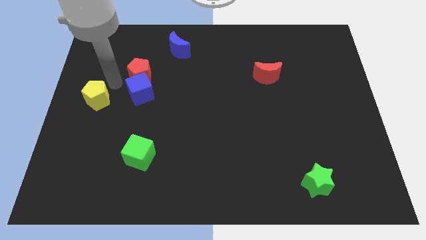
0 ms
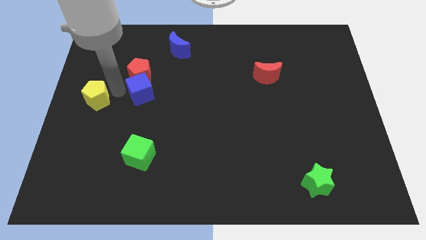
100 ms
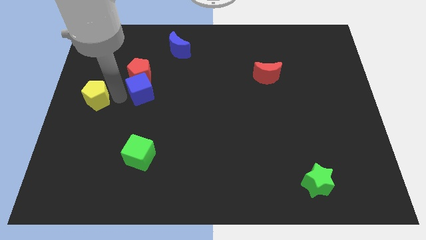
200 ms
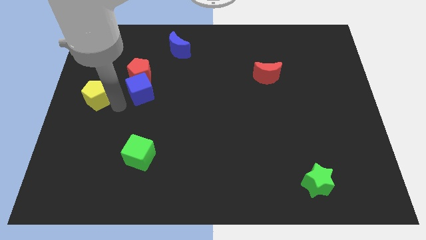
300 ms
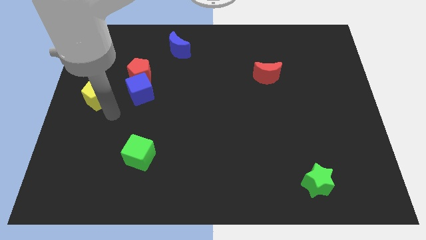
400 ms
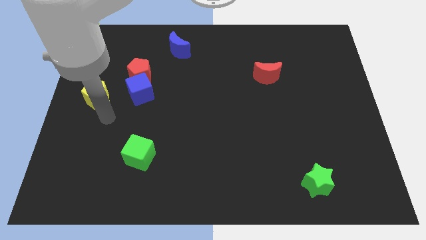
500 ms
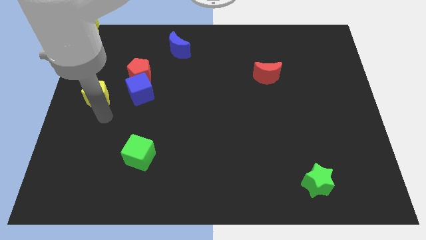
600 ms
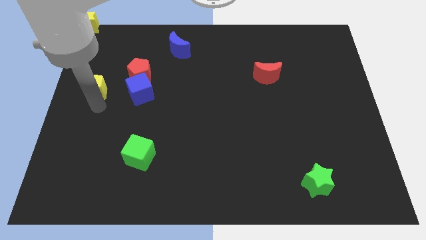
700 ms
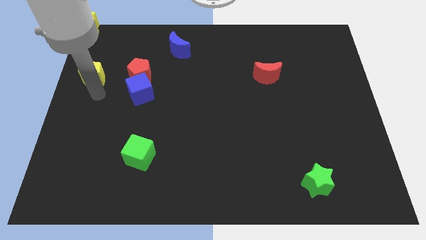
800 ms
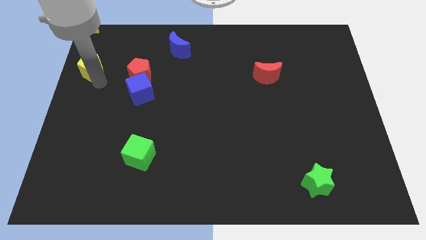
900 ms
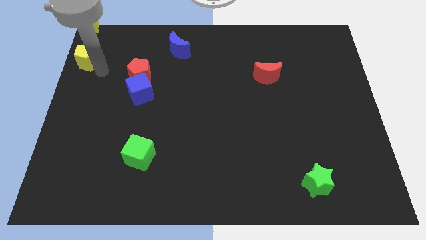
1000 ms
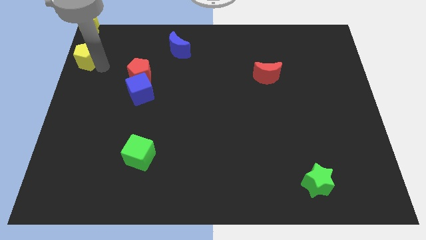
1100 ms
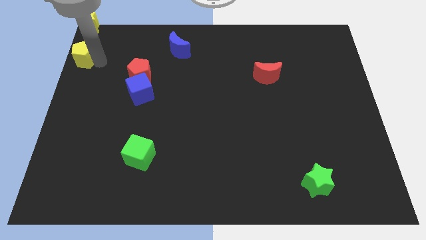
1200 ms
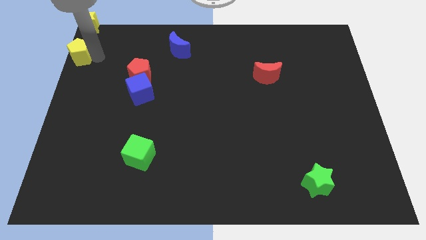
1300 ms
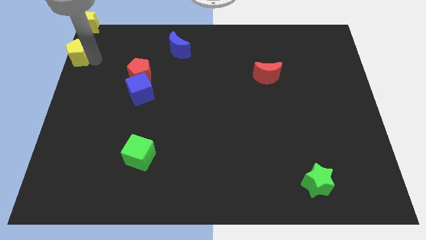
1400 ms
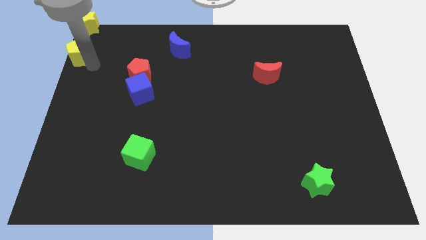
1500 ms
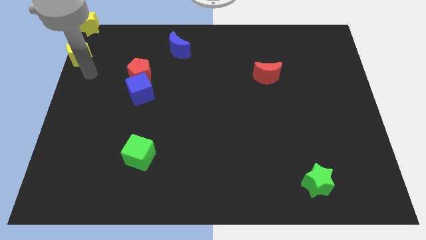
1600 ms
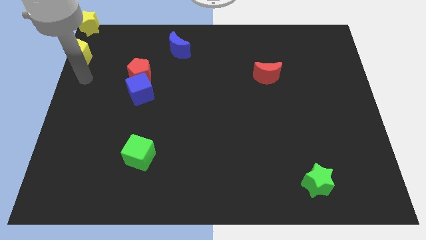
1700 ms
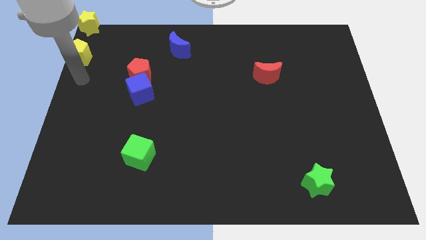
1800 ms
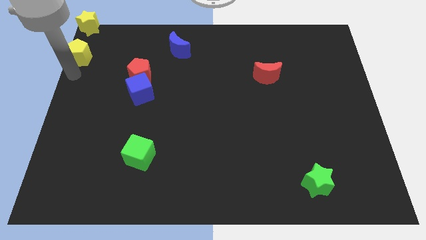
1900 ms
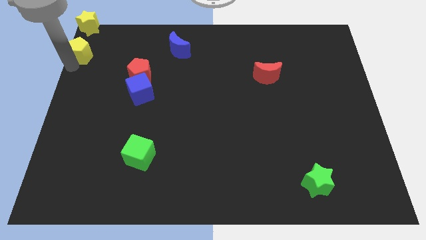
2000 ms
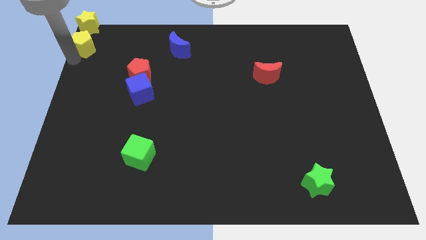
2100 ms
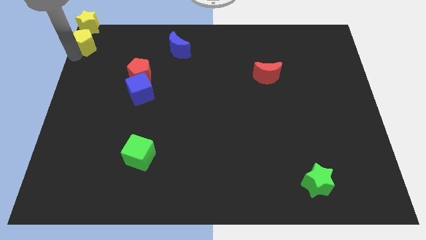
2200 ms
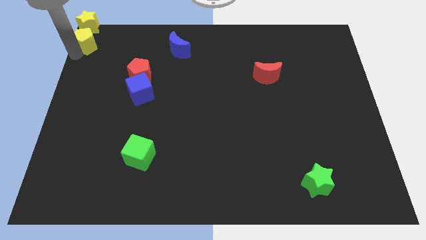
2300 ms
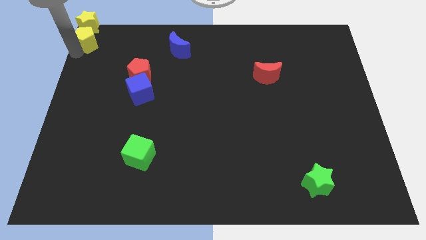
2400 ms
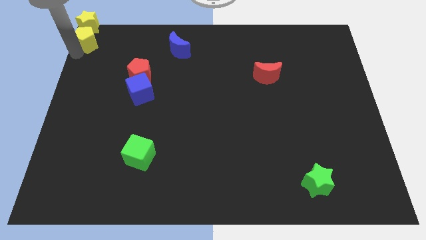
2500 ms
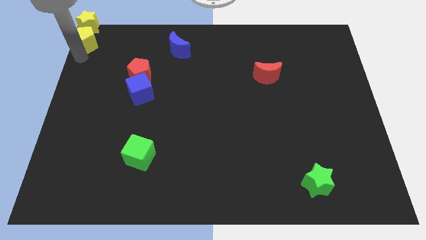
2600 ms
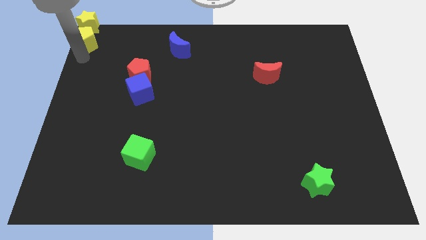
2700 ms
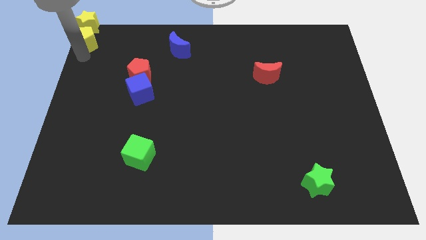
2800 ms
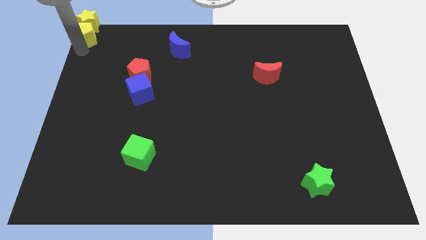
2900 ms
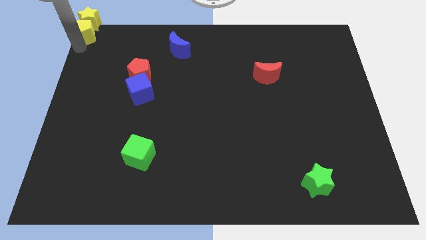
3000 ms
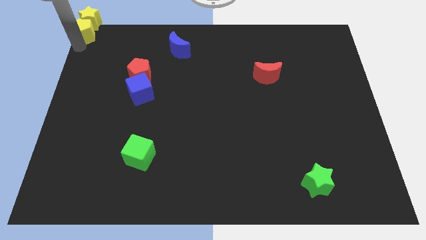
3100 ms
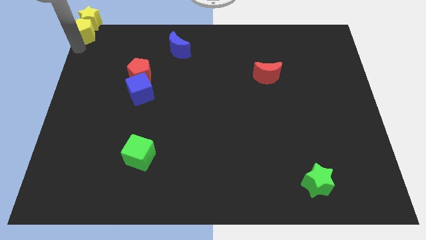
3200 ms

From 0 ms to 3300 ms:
push the yellow pentagon to the bottom of the yellow star

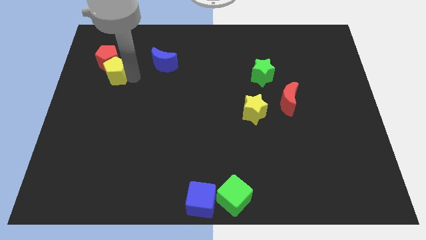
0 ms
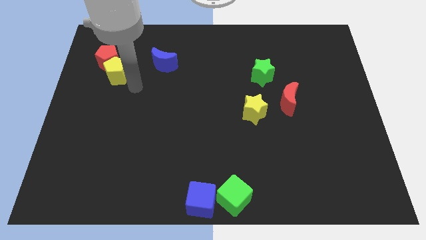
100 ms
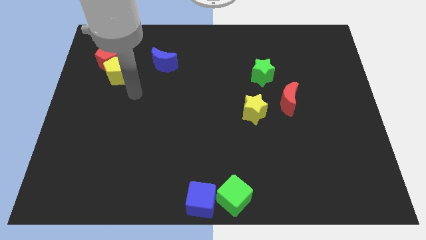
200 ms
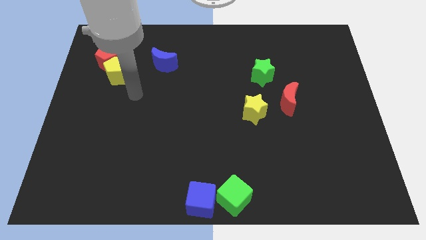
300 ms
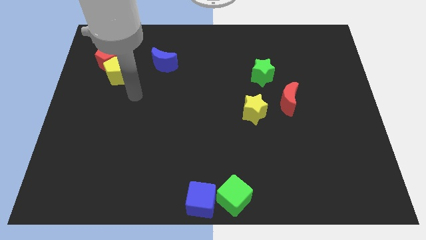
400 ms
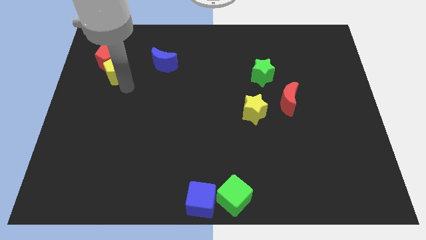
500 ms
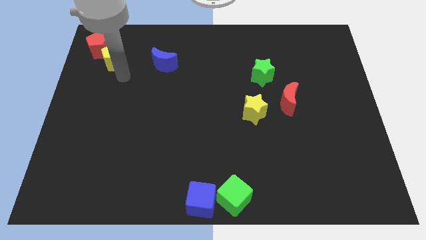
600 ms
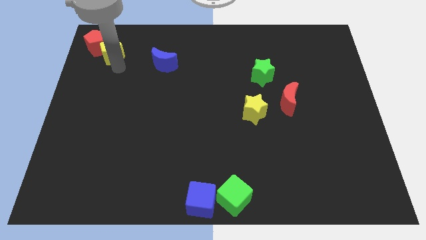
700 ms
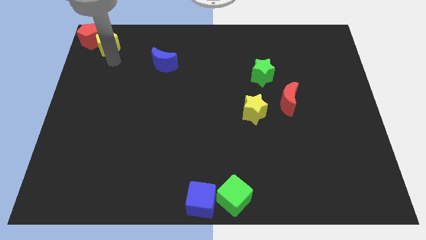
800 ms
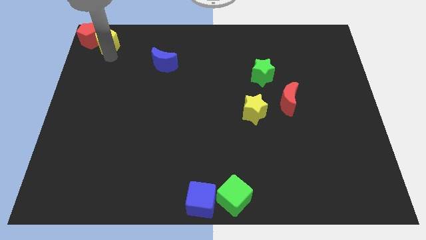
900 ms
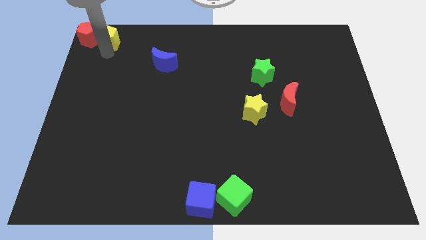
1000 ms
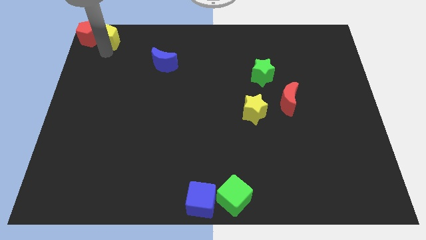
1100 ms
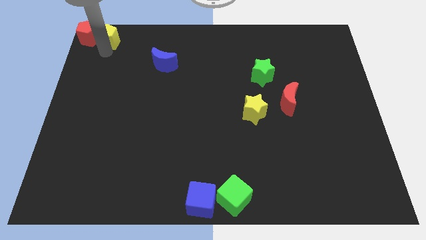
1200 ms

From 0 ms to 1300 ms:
push both the pentagons at the top left corner of the board

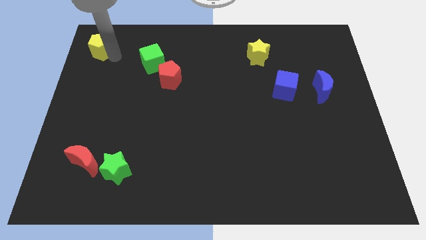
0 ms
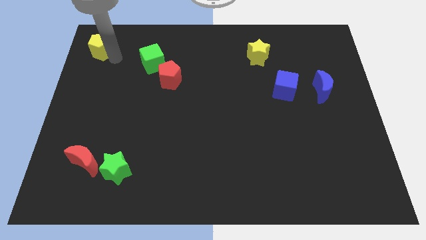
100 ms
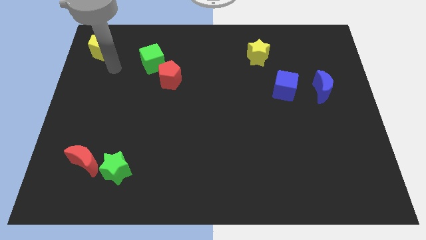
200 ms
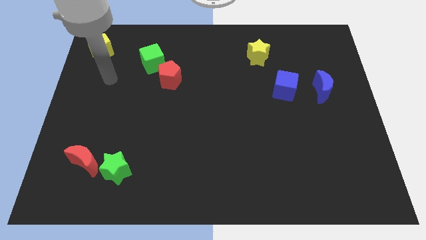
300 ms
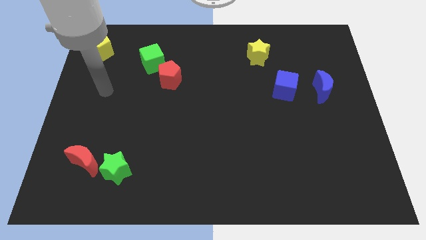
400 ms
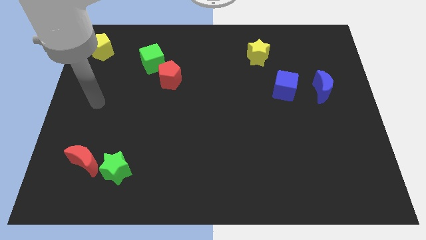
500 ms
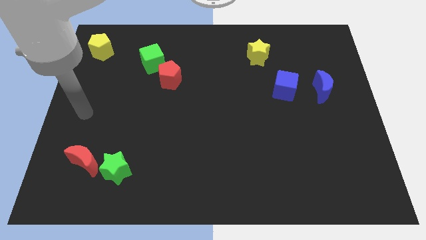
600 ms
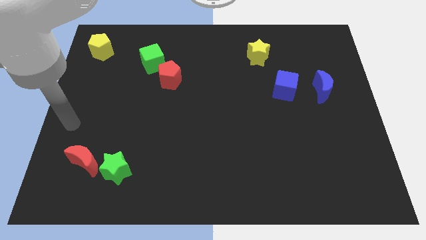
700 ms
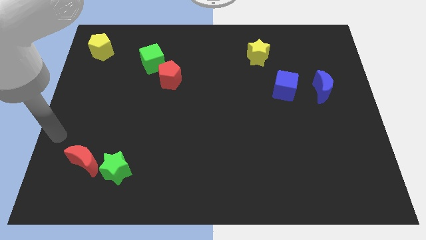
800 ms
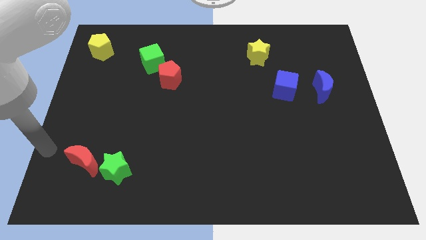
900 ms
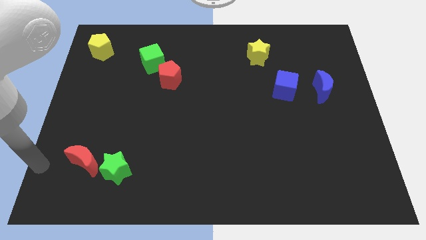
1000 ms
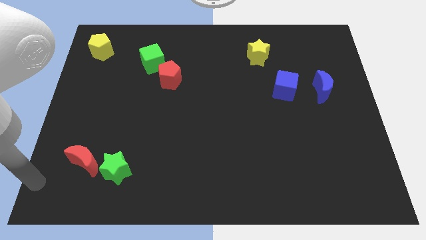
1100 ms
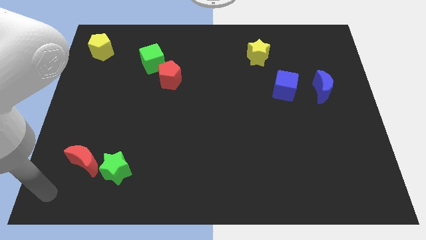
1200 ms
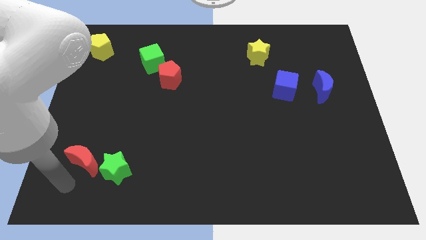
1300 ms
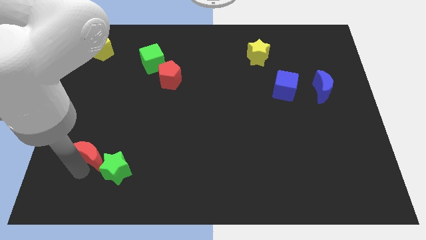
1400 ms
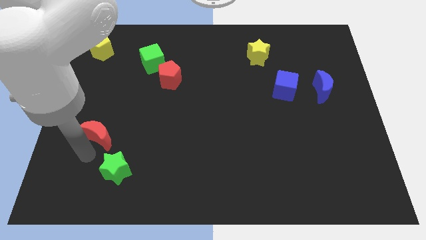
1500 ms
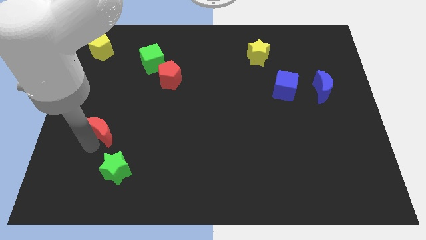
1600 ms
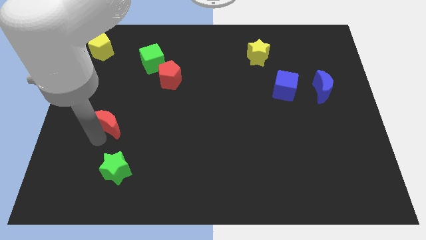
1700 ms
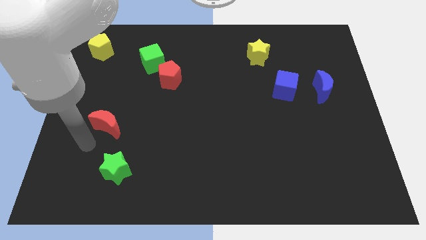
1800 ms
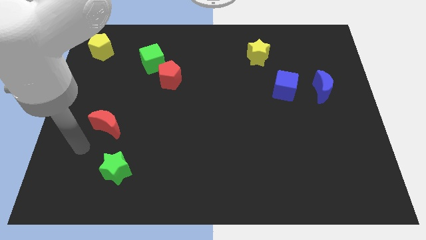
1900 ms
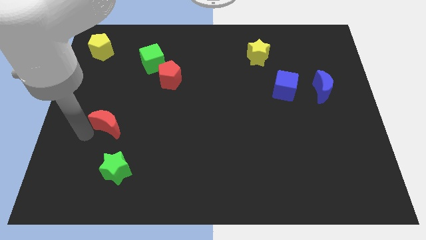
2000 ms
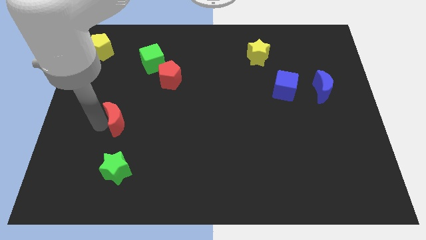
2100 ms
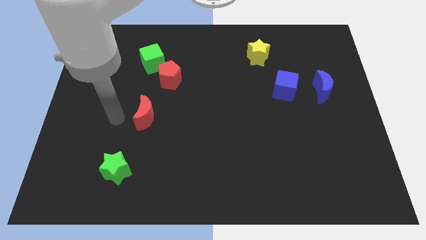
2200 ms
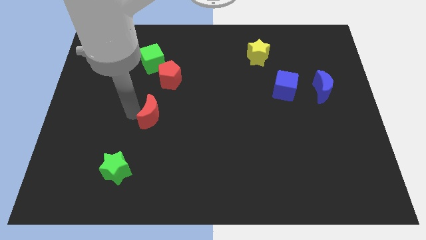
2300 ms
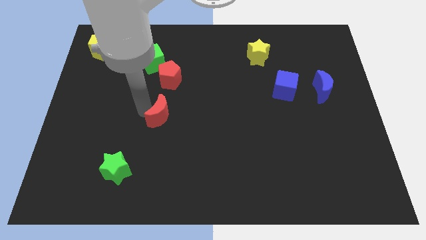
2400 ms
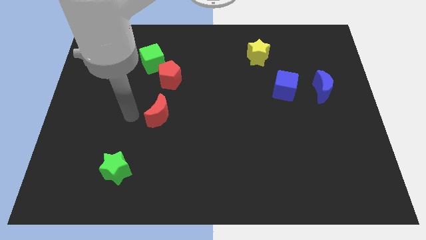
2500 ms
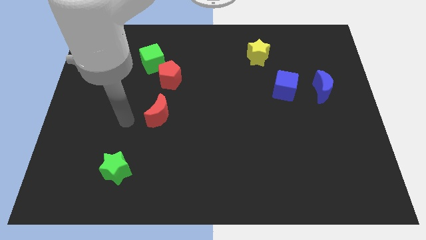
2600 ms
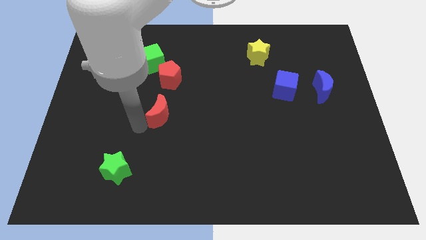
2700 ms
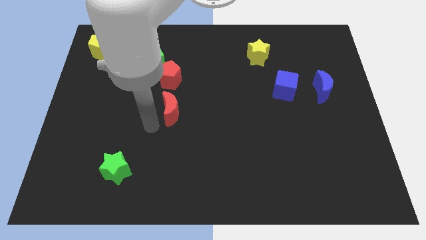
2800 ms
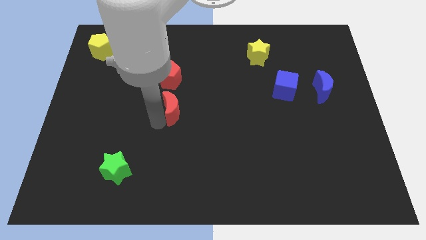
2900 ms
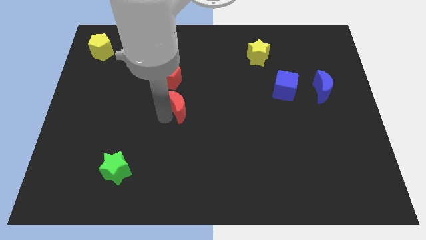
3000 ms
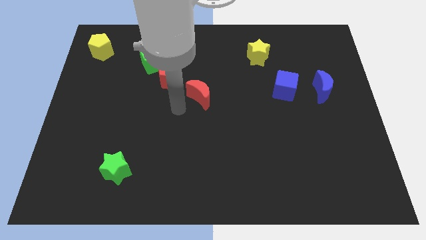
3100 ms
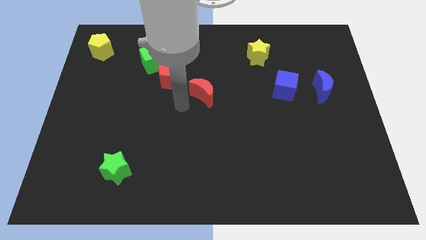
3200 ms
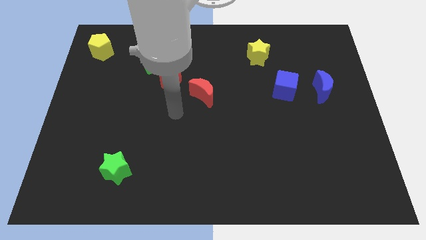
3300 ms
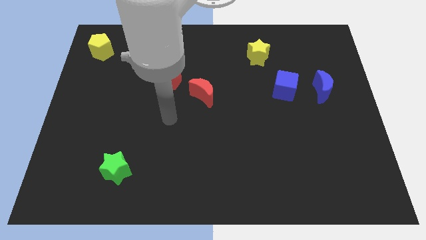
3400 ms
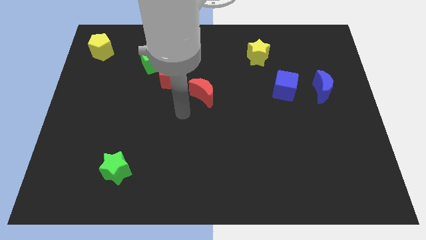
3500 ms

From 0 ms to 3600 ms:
move the red crescent to the center

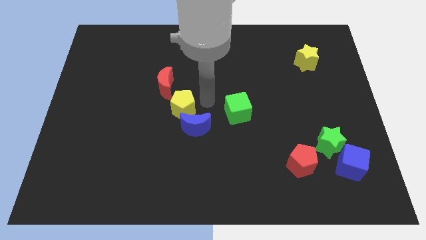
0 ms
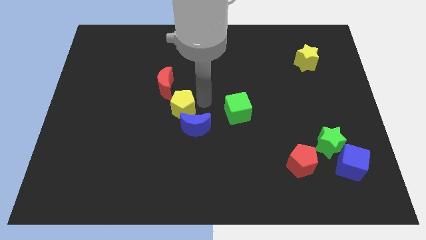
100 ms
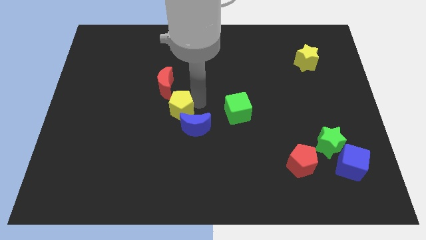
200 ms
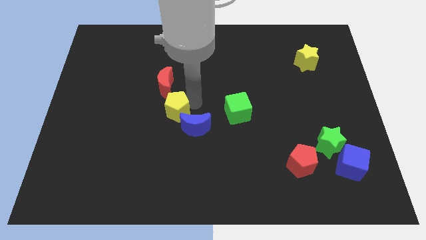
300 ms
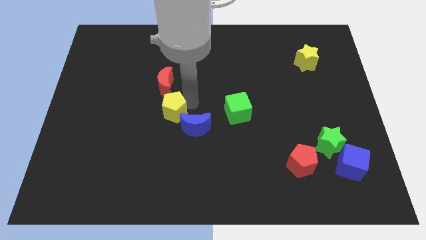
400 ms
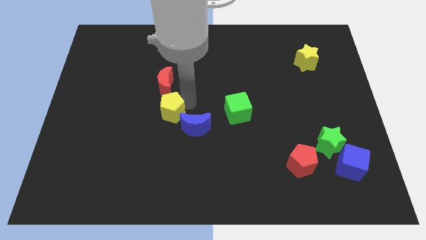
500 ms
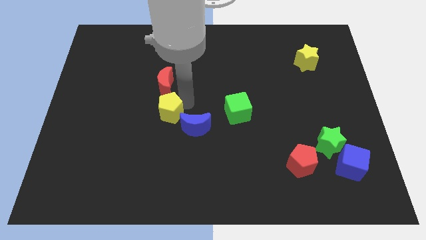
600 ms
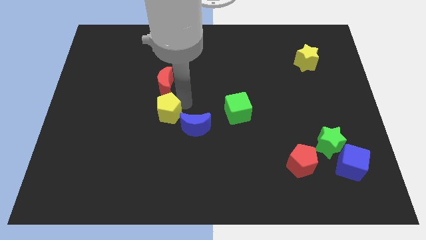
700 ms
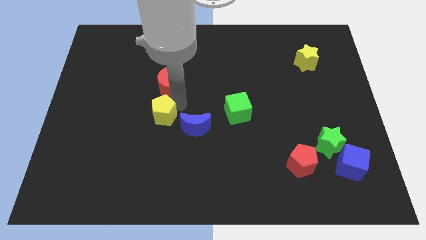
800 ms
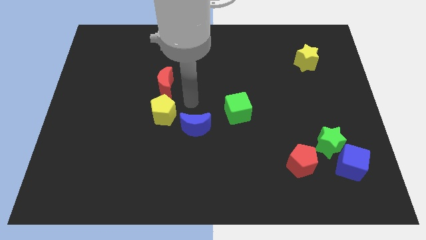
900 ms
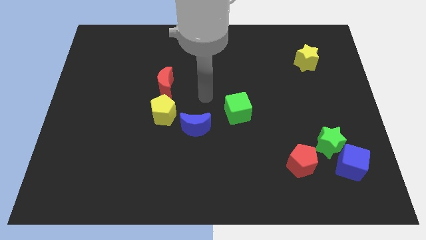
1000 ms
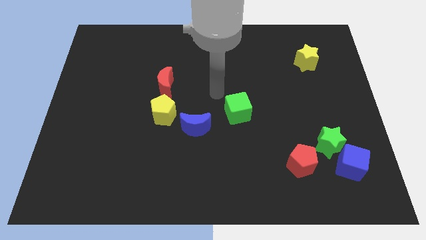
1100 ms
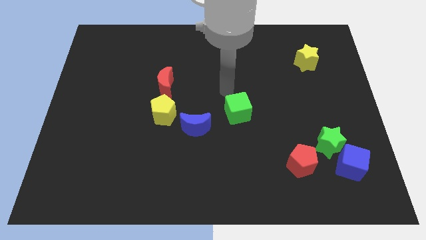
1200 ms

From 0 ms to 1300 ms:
move the yellow pentagon slightly towards the left
